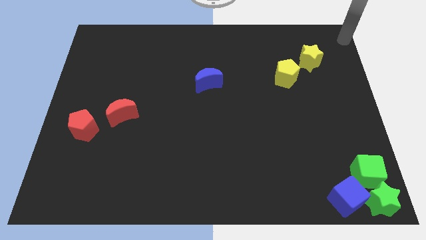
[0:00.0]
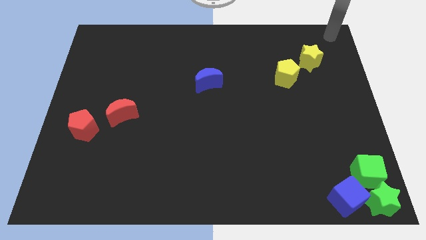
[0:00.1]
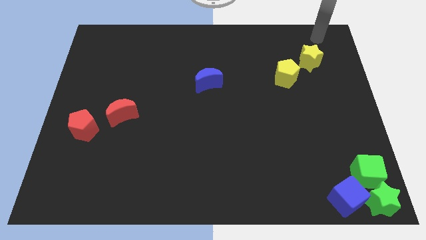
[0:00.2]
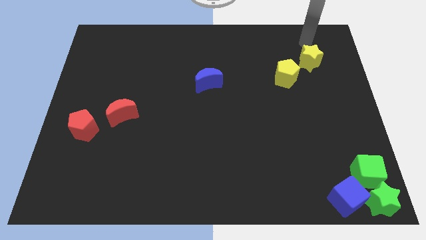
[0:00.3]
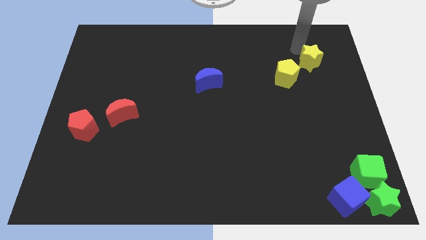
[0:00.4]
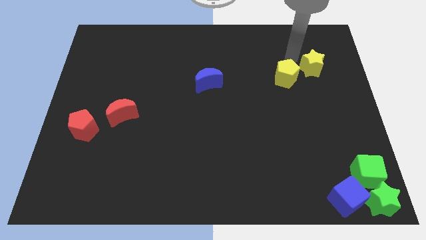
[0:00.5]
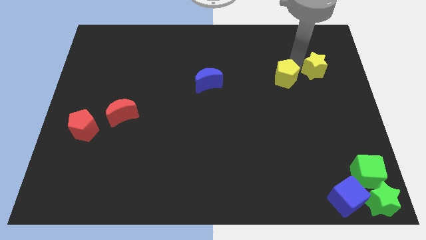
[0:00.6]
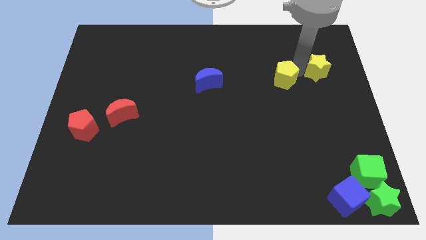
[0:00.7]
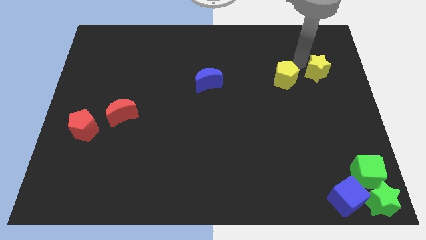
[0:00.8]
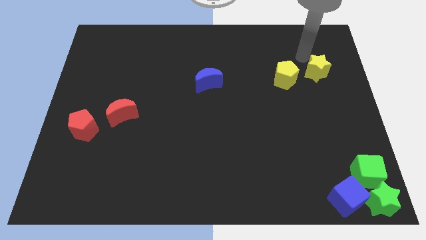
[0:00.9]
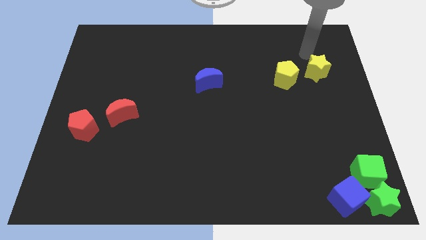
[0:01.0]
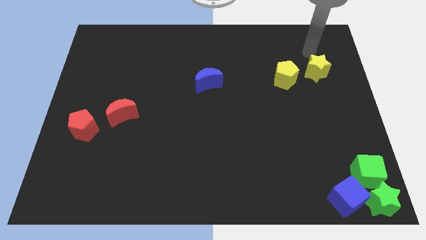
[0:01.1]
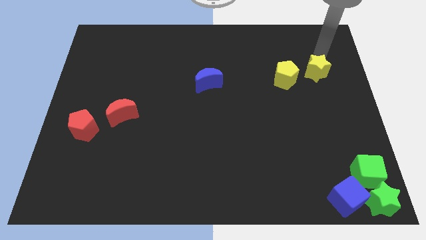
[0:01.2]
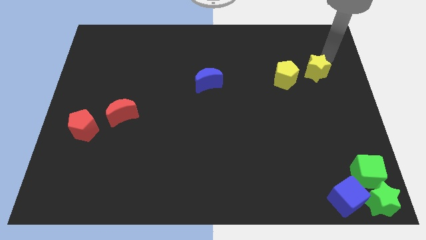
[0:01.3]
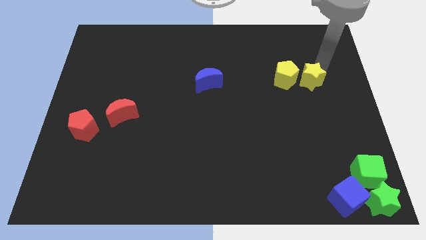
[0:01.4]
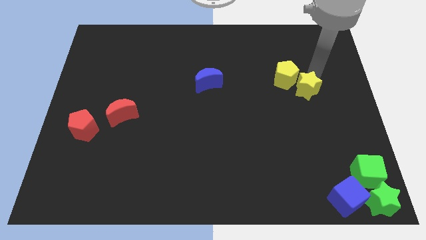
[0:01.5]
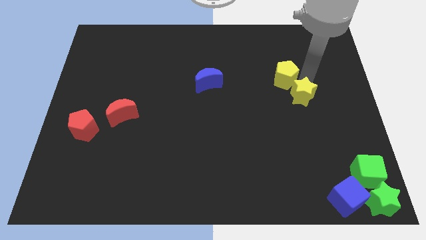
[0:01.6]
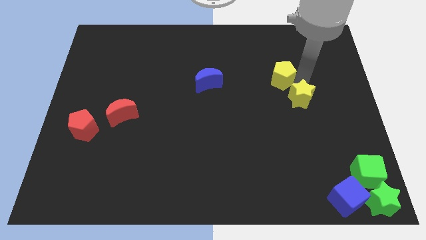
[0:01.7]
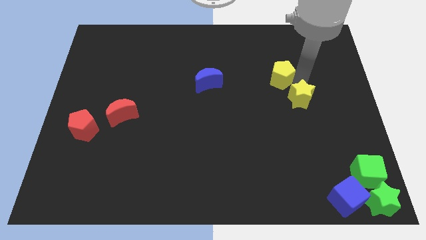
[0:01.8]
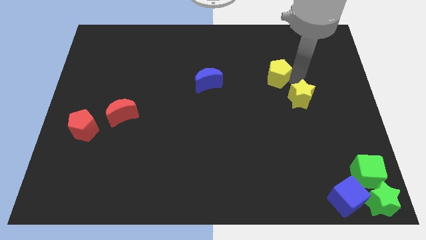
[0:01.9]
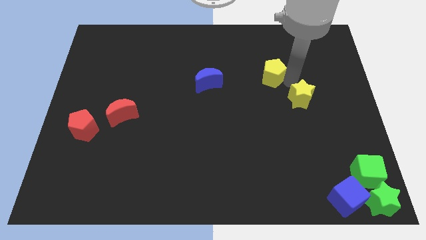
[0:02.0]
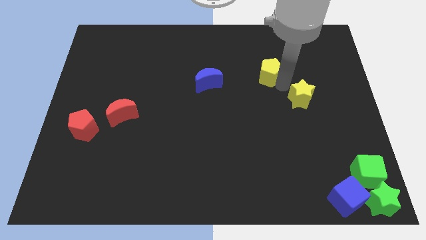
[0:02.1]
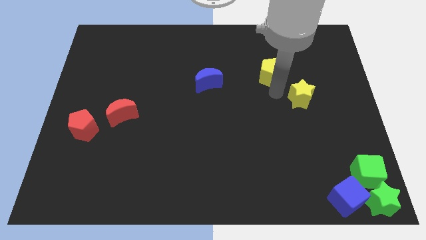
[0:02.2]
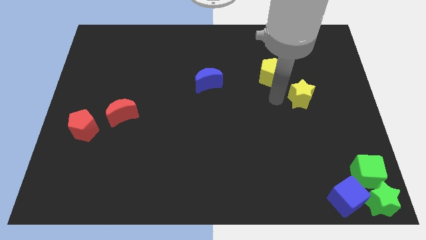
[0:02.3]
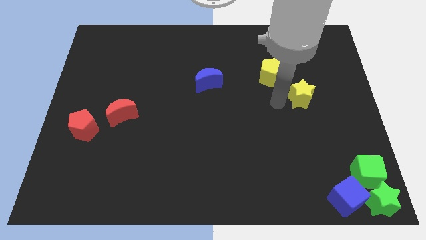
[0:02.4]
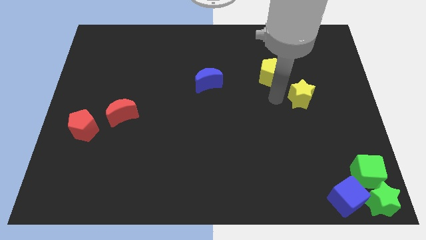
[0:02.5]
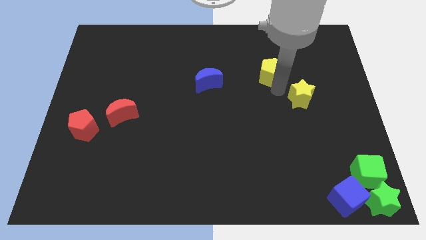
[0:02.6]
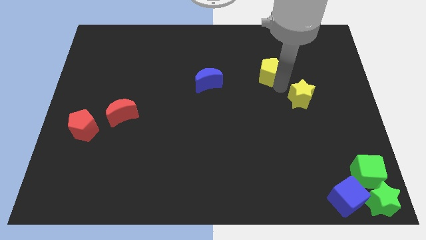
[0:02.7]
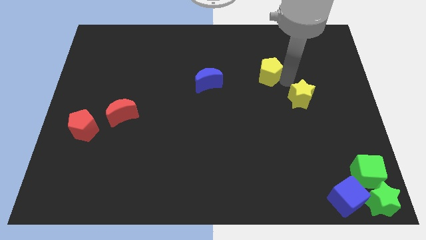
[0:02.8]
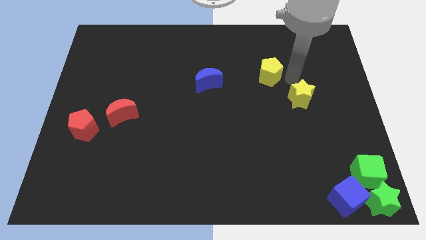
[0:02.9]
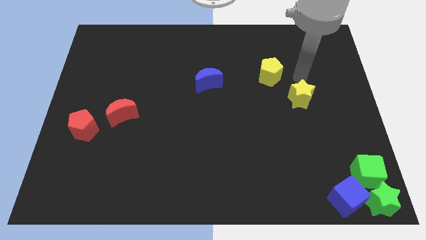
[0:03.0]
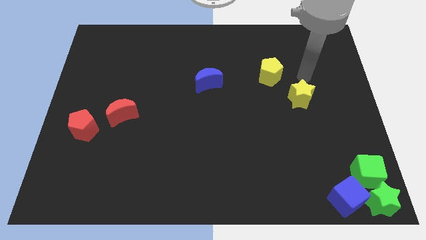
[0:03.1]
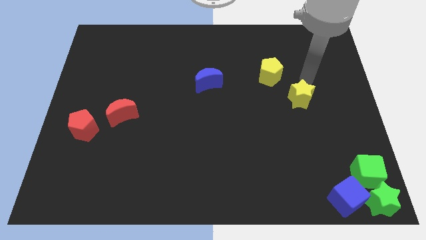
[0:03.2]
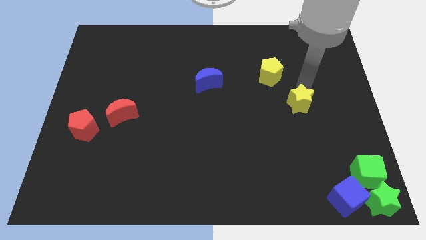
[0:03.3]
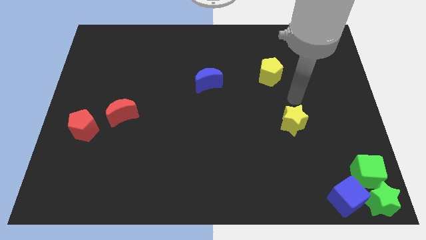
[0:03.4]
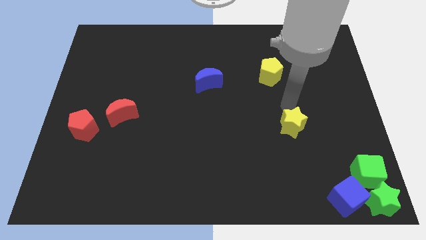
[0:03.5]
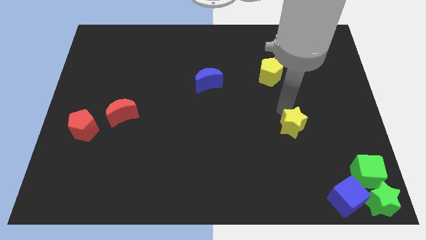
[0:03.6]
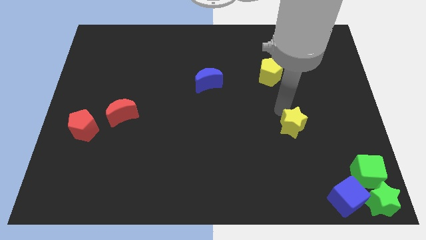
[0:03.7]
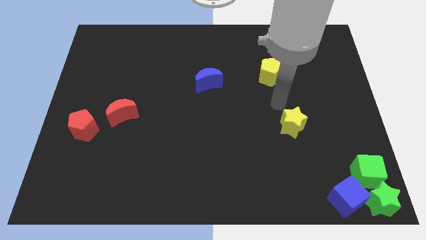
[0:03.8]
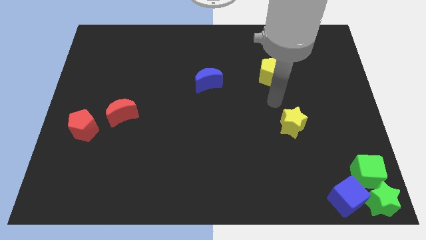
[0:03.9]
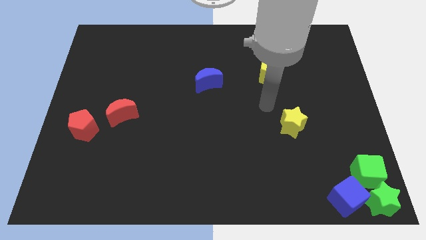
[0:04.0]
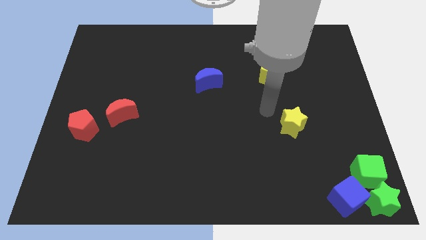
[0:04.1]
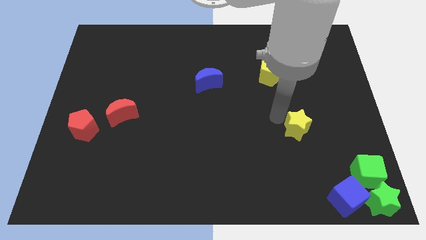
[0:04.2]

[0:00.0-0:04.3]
push the yellow star away from the yellow pentagon

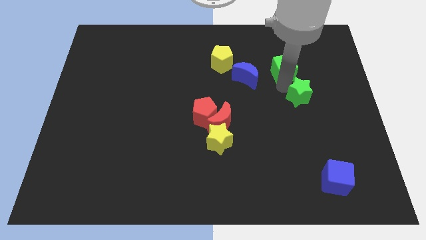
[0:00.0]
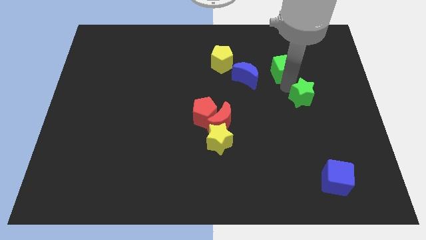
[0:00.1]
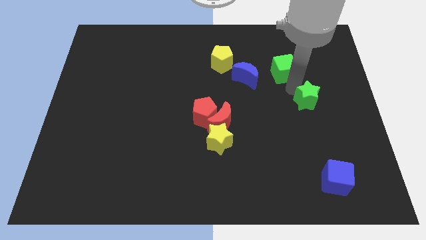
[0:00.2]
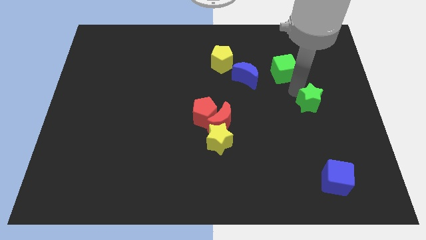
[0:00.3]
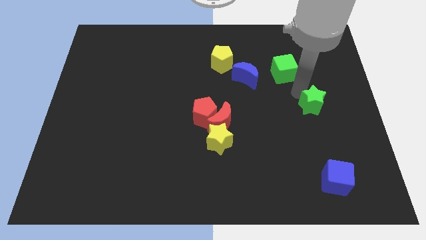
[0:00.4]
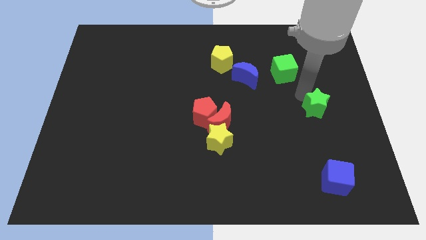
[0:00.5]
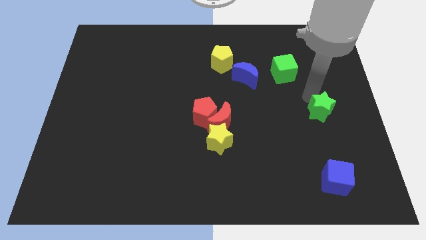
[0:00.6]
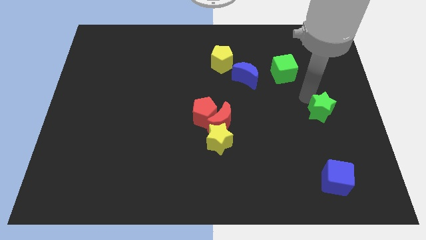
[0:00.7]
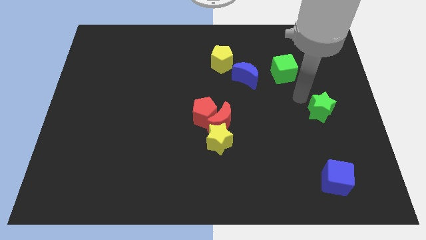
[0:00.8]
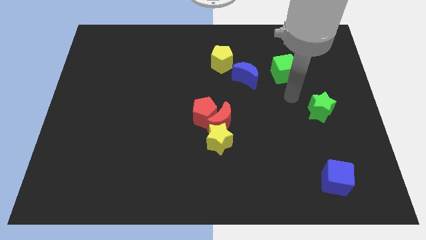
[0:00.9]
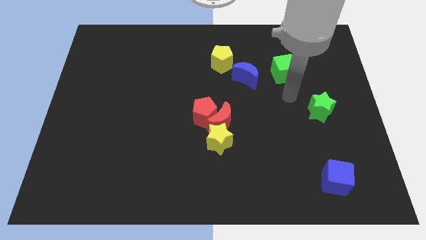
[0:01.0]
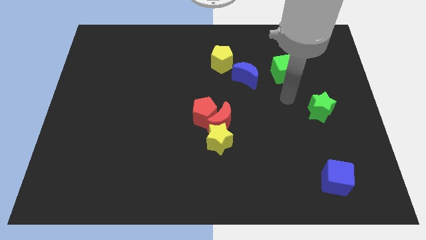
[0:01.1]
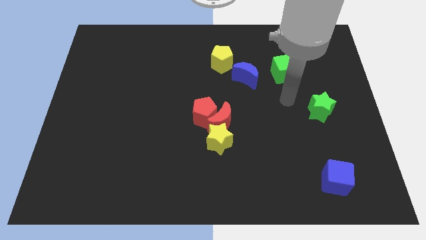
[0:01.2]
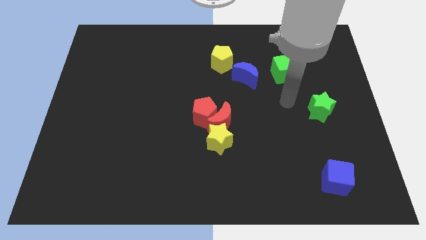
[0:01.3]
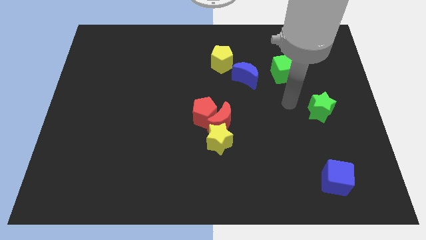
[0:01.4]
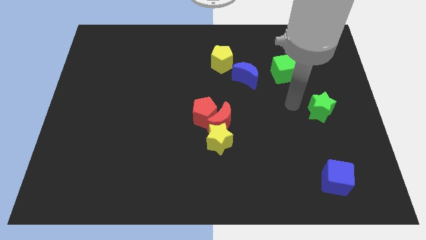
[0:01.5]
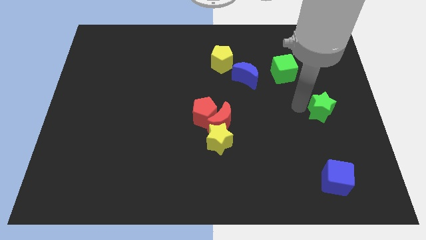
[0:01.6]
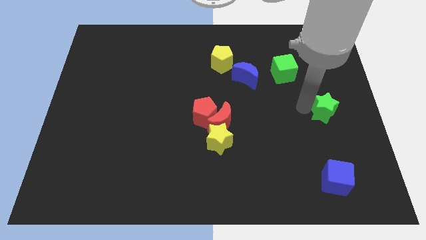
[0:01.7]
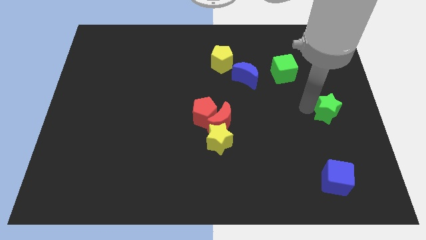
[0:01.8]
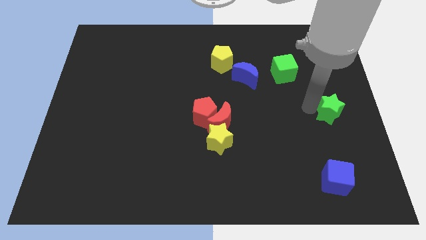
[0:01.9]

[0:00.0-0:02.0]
move the green star towards the center right side

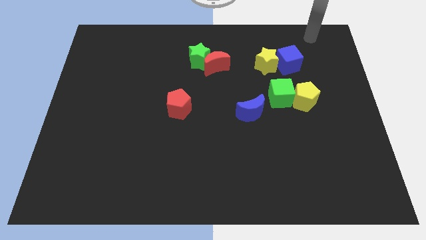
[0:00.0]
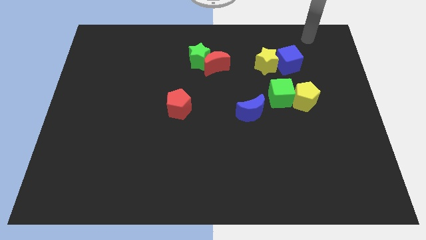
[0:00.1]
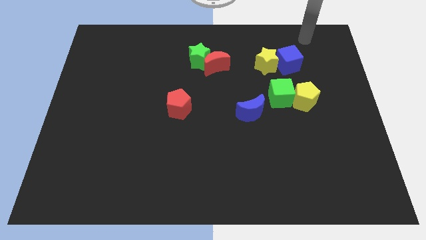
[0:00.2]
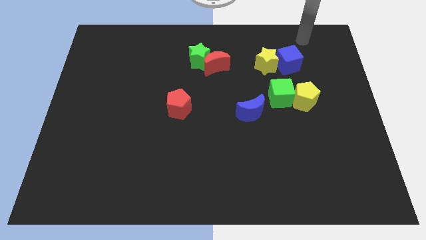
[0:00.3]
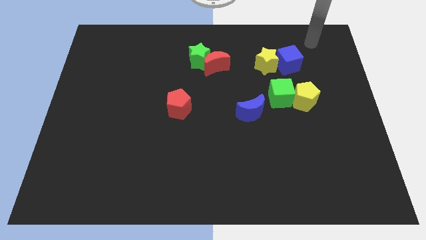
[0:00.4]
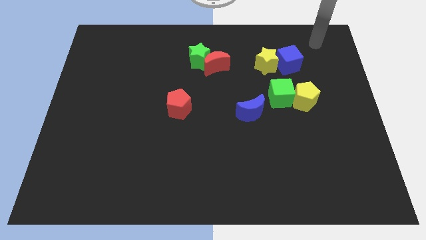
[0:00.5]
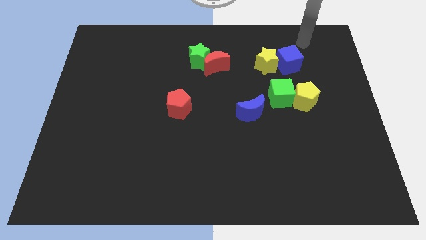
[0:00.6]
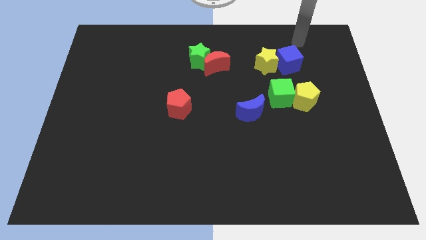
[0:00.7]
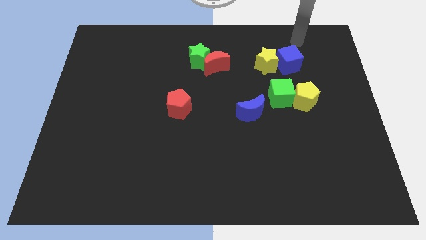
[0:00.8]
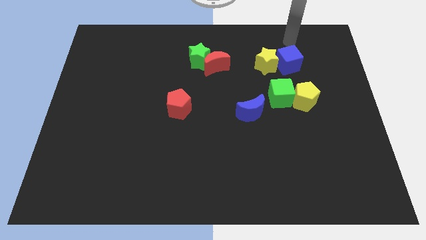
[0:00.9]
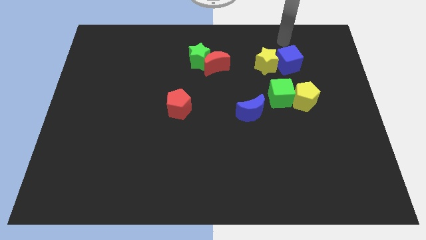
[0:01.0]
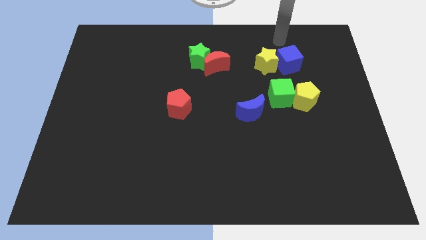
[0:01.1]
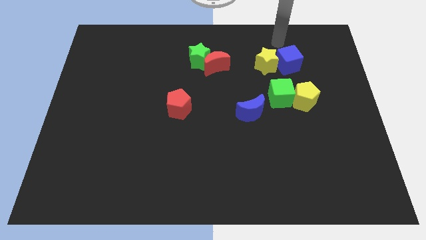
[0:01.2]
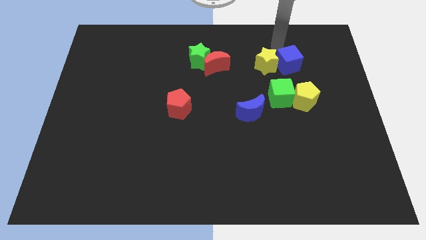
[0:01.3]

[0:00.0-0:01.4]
move your arm to the top of blue cube

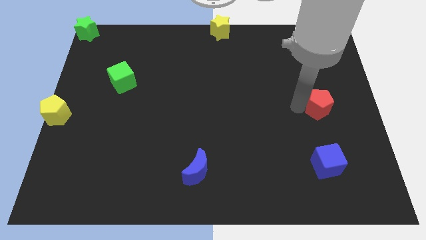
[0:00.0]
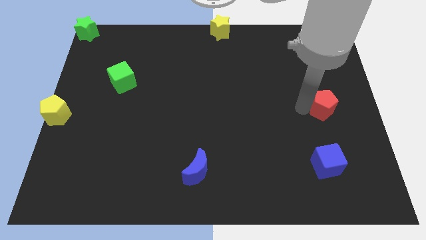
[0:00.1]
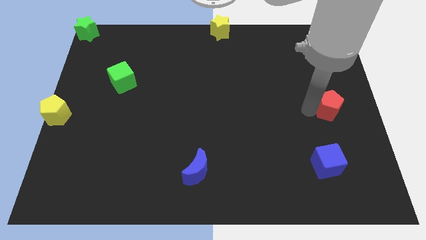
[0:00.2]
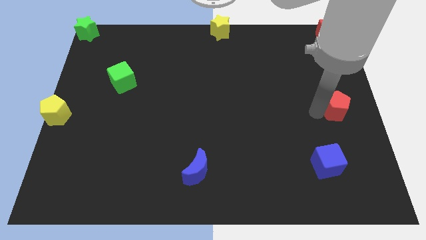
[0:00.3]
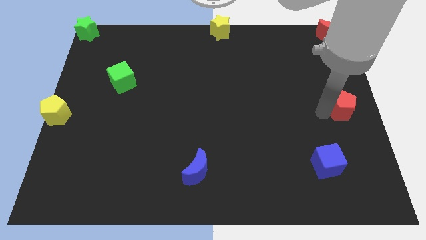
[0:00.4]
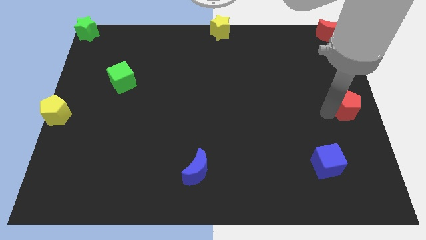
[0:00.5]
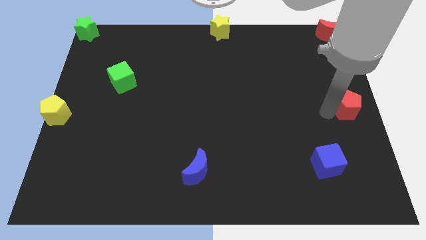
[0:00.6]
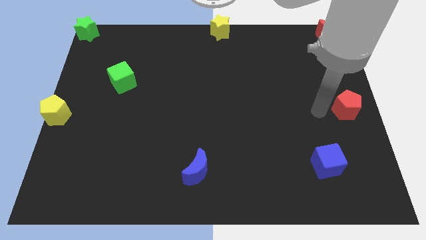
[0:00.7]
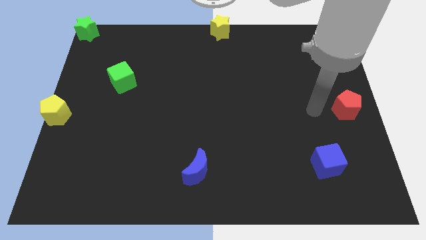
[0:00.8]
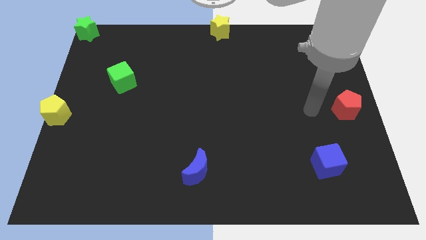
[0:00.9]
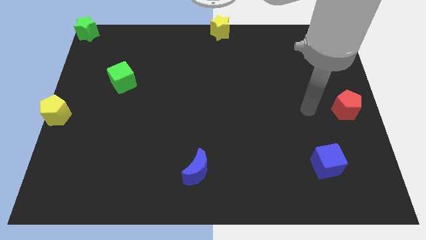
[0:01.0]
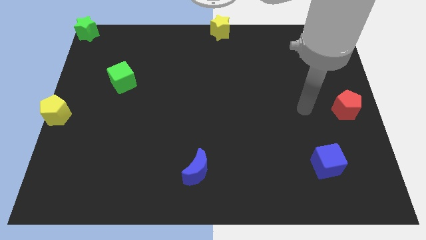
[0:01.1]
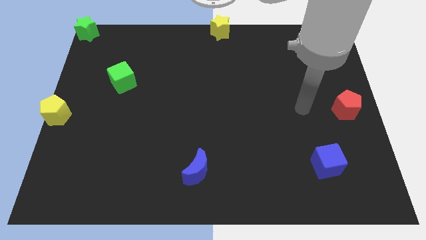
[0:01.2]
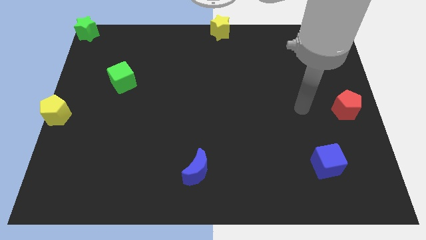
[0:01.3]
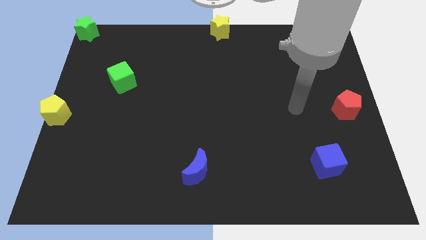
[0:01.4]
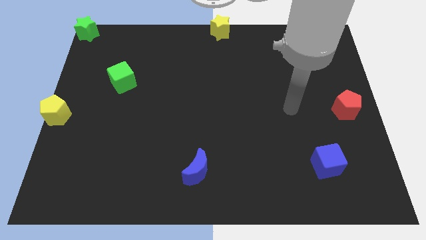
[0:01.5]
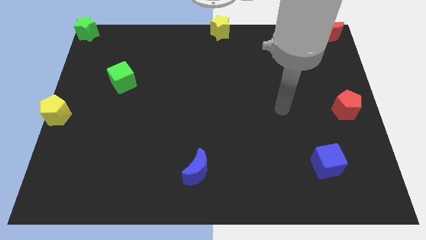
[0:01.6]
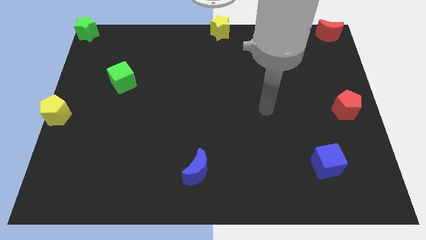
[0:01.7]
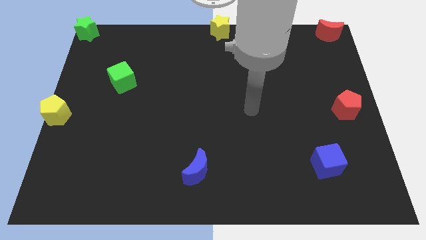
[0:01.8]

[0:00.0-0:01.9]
move the red pentagon to the right center of the board
